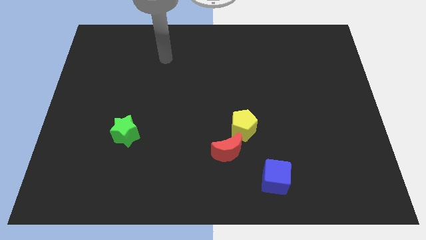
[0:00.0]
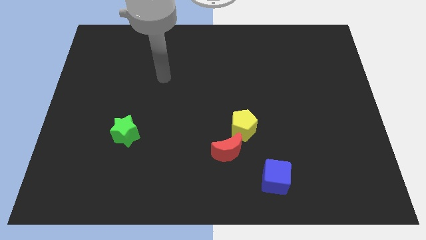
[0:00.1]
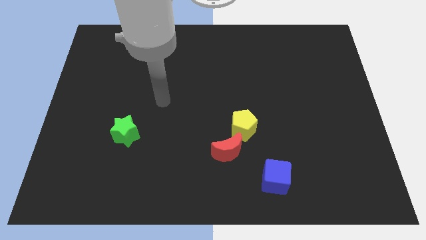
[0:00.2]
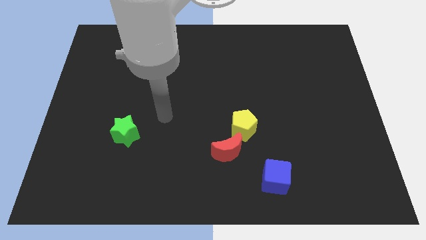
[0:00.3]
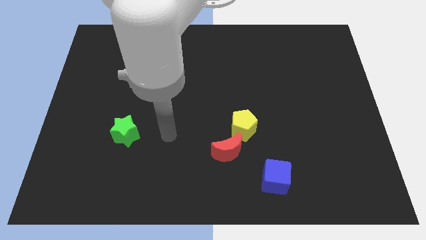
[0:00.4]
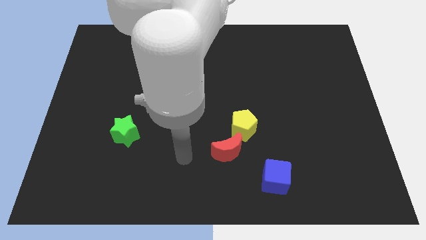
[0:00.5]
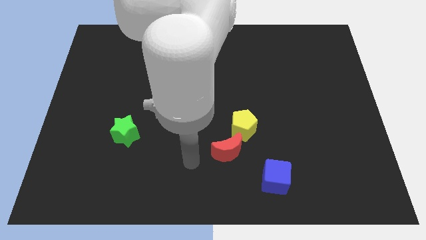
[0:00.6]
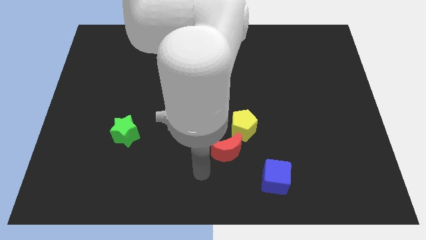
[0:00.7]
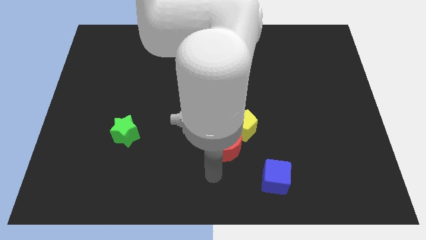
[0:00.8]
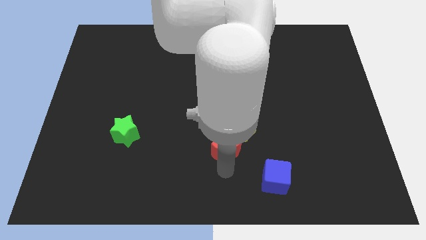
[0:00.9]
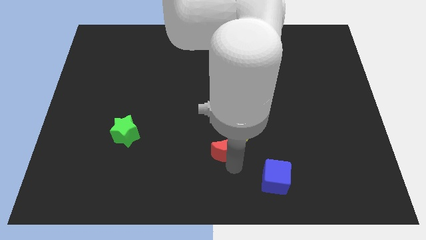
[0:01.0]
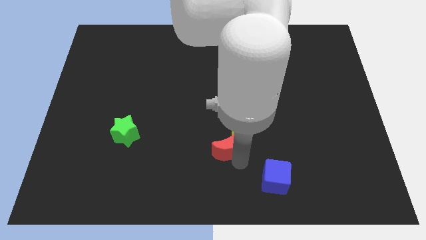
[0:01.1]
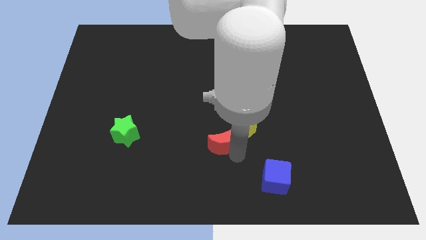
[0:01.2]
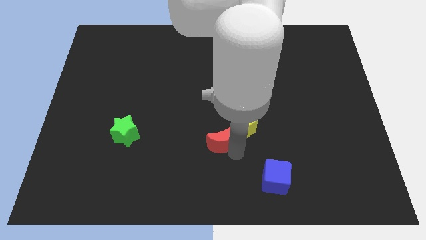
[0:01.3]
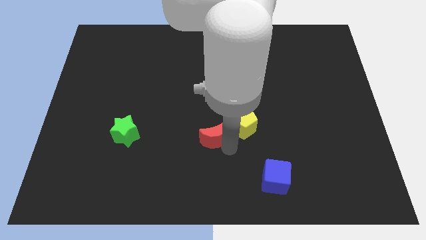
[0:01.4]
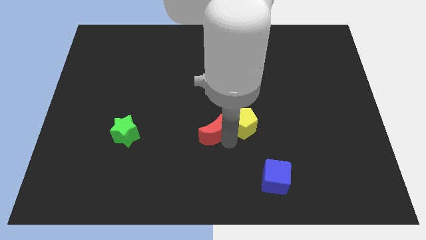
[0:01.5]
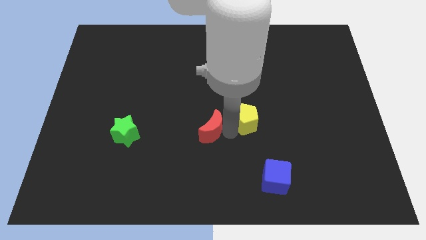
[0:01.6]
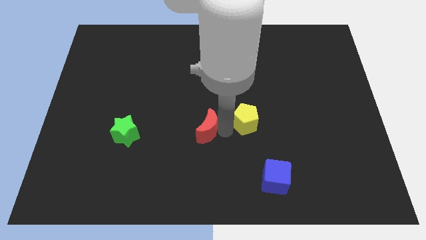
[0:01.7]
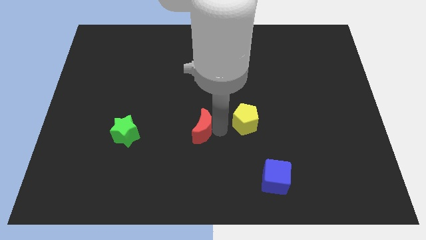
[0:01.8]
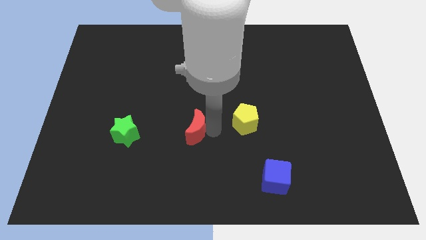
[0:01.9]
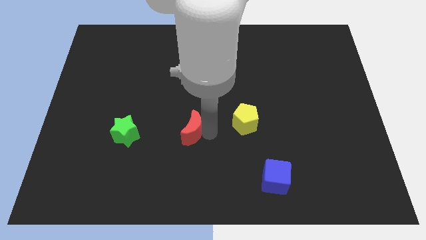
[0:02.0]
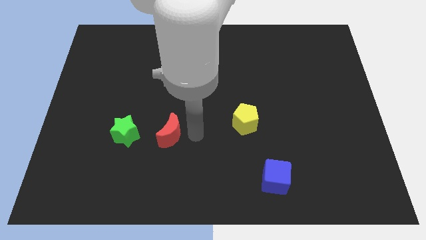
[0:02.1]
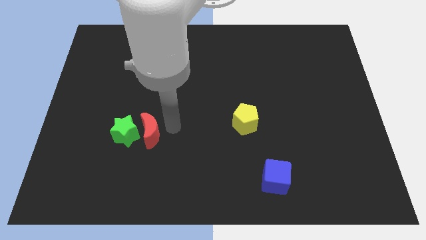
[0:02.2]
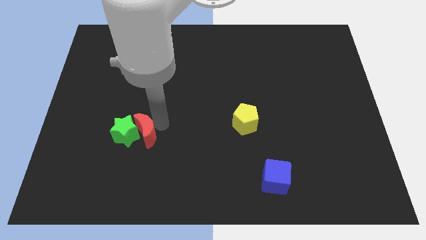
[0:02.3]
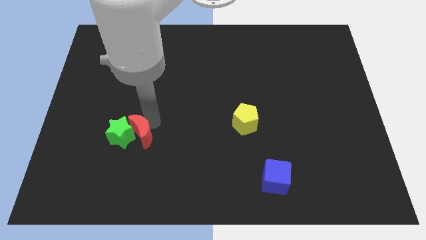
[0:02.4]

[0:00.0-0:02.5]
slide the red block towards the star

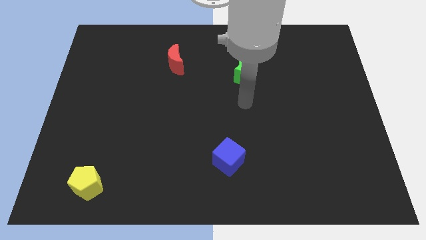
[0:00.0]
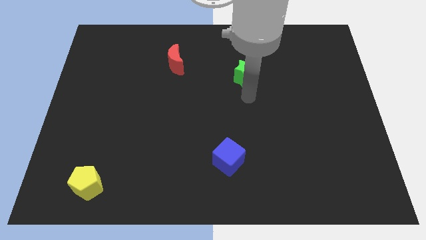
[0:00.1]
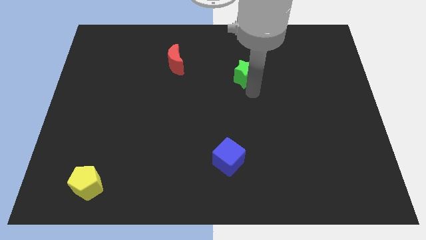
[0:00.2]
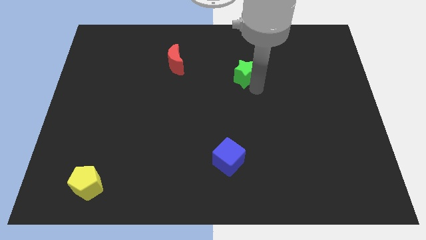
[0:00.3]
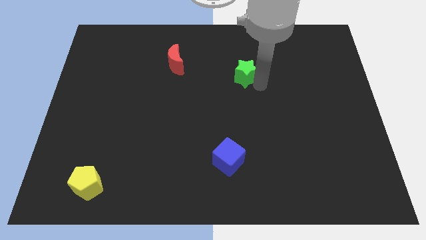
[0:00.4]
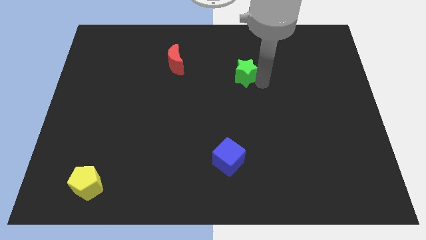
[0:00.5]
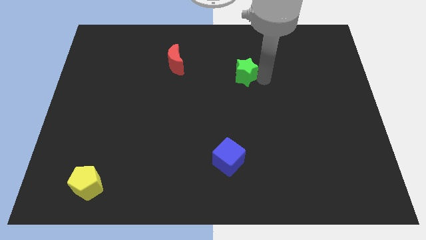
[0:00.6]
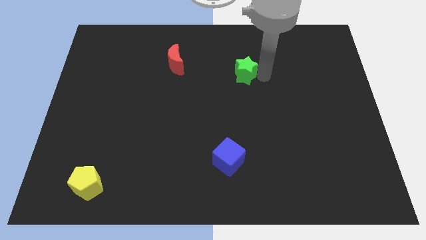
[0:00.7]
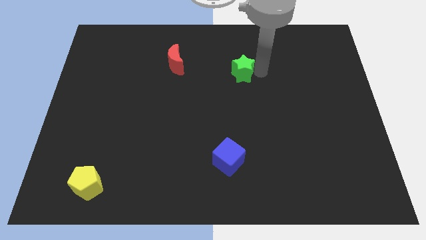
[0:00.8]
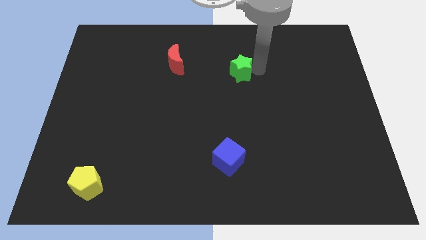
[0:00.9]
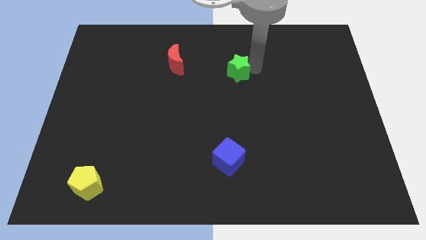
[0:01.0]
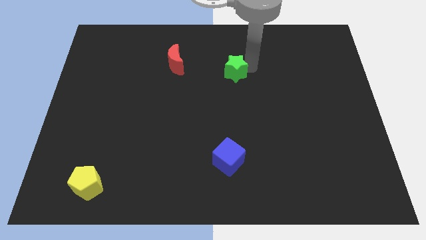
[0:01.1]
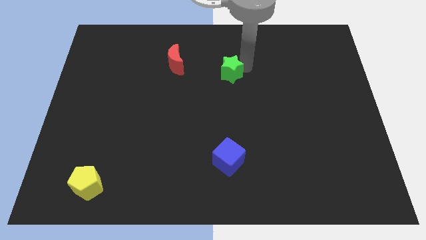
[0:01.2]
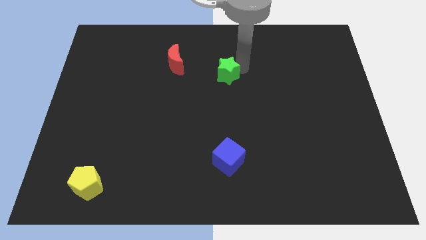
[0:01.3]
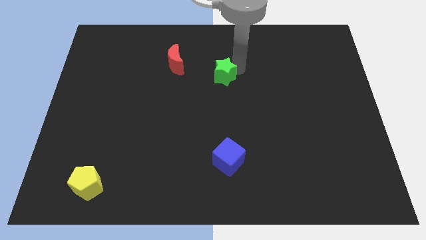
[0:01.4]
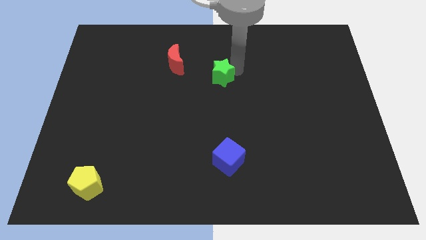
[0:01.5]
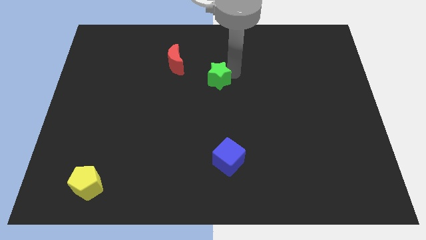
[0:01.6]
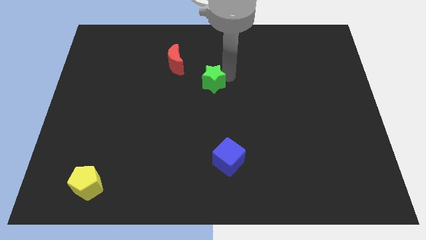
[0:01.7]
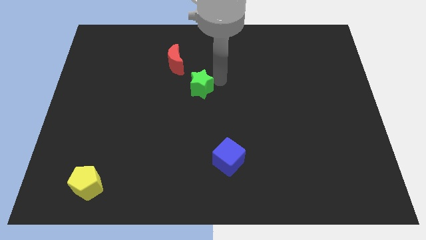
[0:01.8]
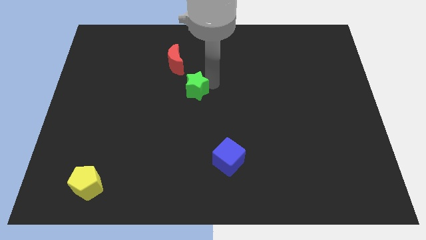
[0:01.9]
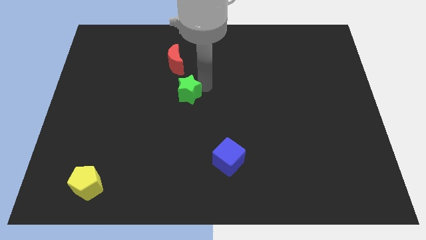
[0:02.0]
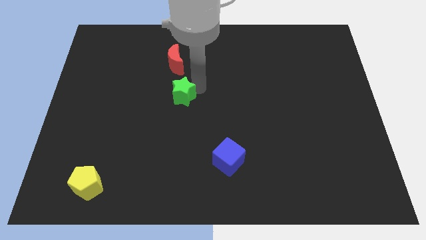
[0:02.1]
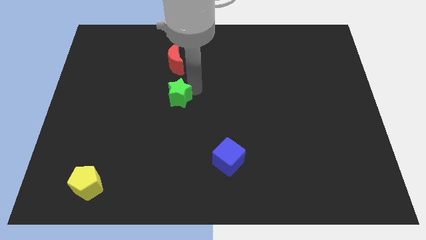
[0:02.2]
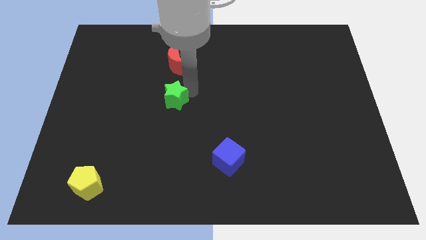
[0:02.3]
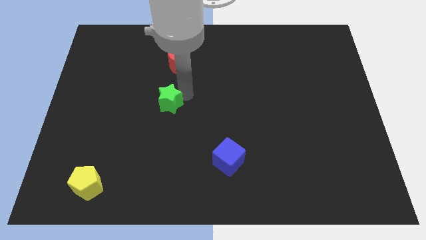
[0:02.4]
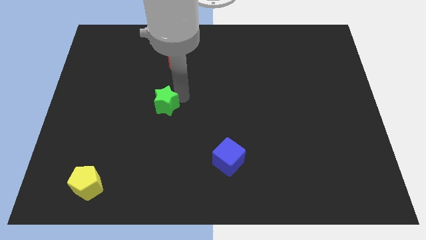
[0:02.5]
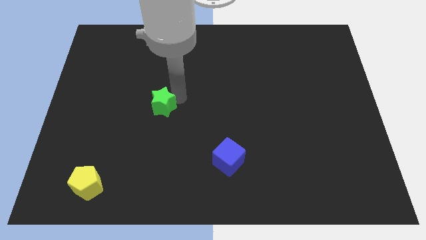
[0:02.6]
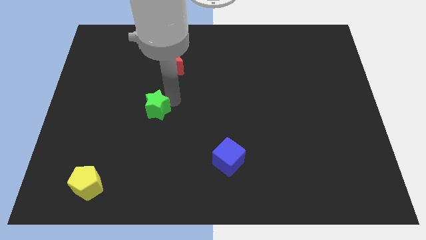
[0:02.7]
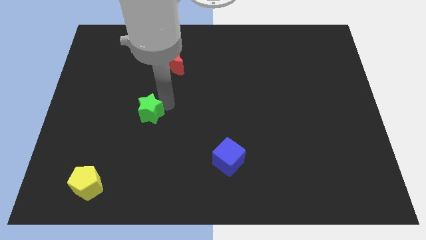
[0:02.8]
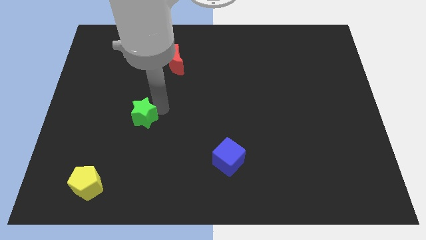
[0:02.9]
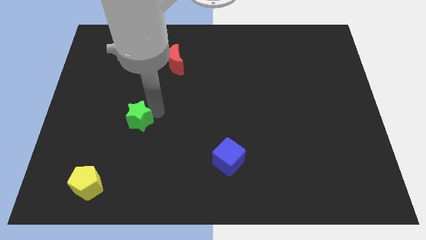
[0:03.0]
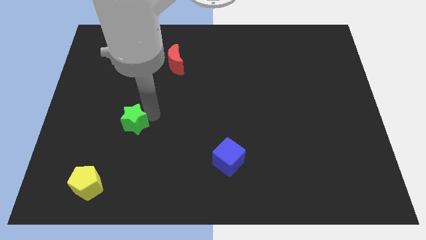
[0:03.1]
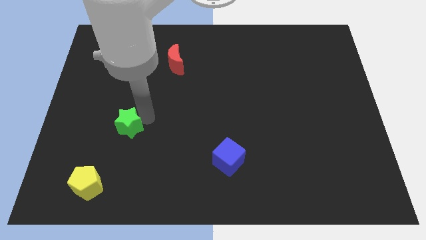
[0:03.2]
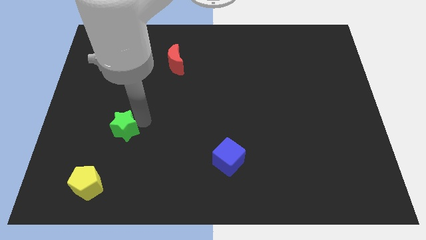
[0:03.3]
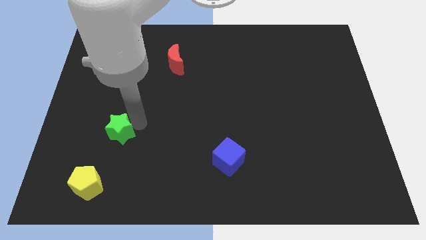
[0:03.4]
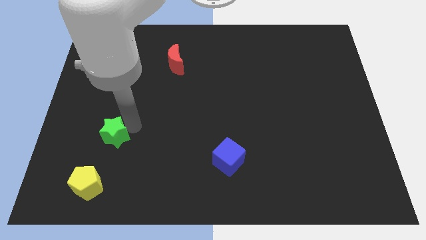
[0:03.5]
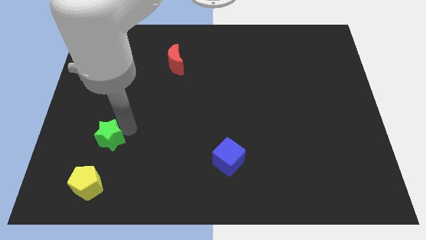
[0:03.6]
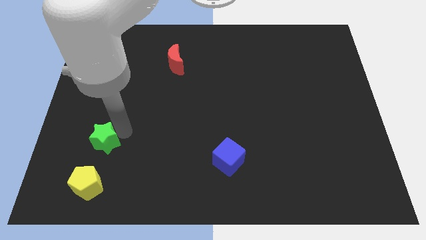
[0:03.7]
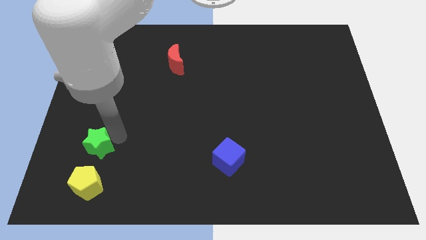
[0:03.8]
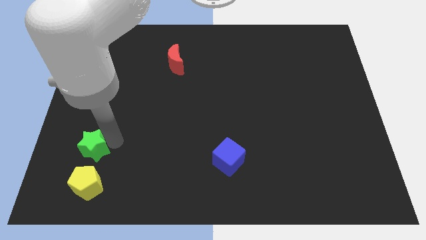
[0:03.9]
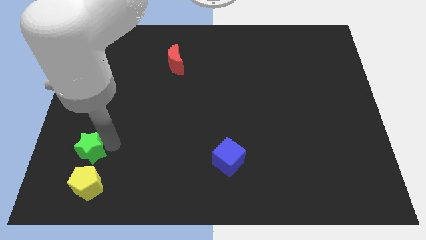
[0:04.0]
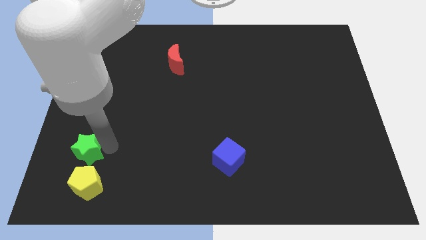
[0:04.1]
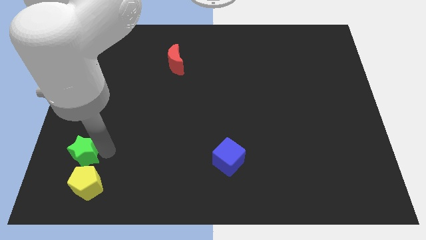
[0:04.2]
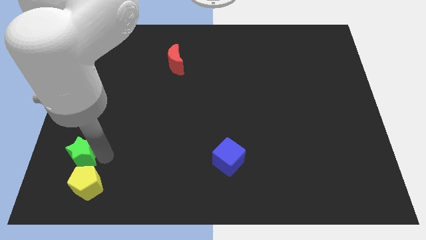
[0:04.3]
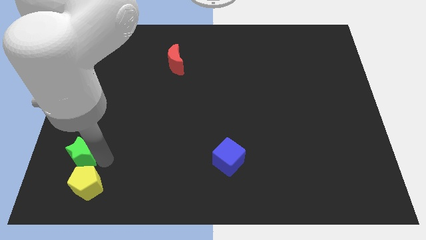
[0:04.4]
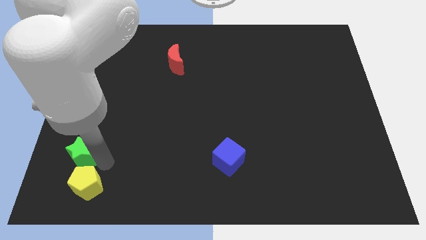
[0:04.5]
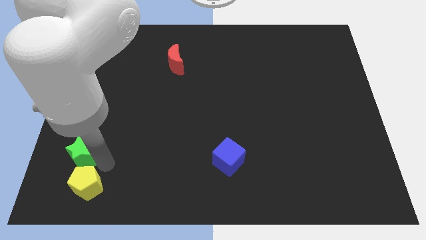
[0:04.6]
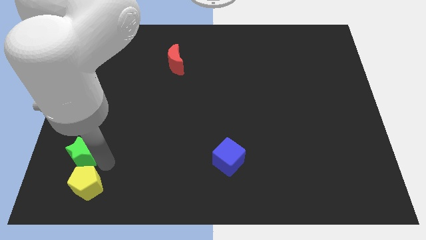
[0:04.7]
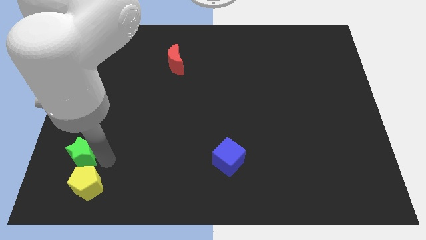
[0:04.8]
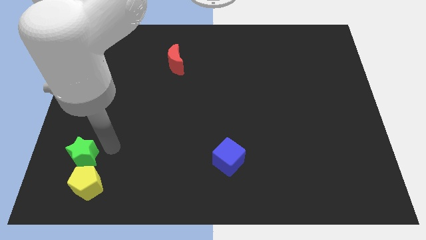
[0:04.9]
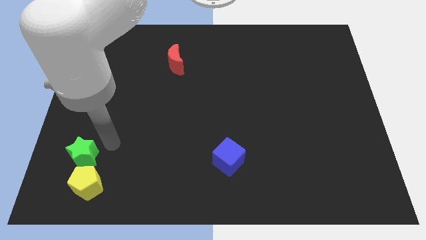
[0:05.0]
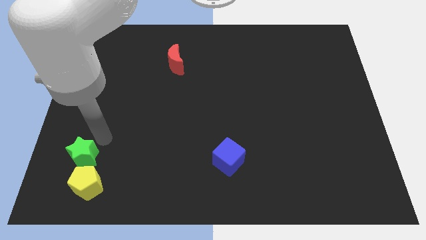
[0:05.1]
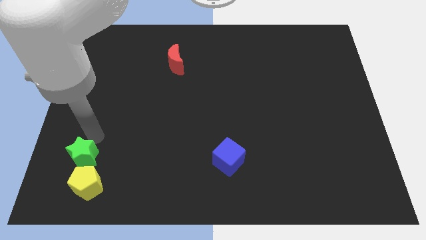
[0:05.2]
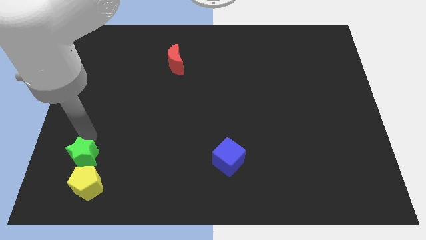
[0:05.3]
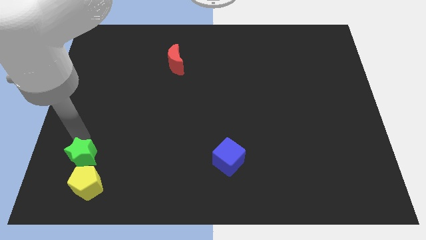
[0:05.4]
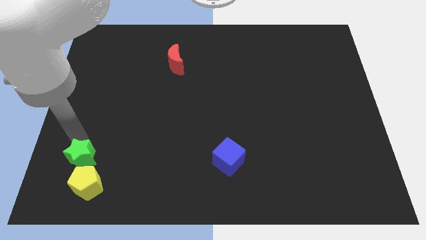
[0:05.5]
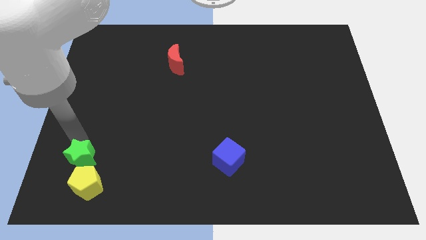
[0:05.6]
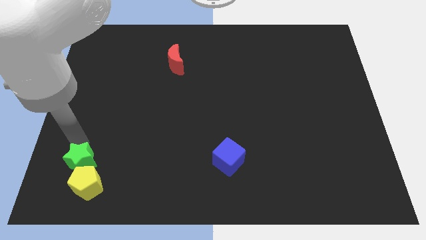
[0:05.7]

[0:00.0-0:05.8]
push the star close to the yellow pentagon
